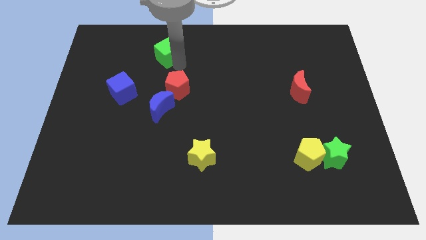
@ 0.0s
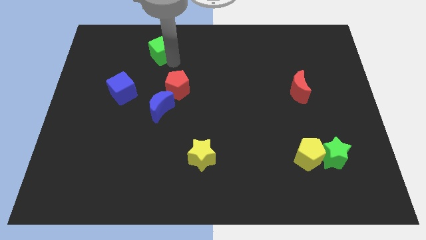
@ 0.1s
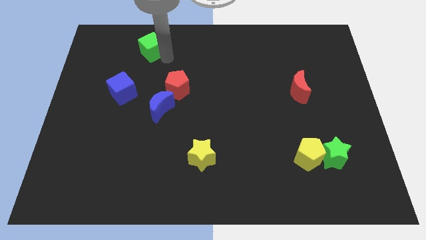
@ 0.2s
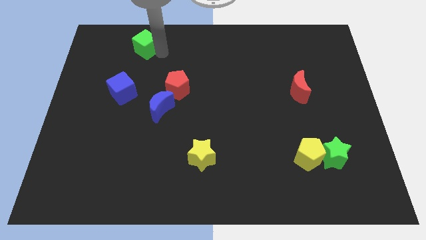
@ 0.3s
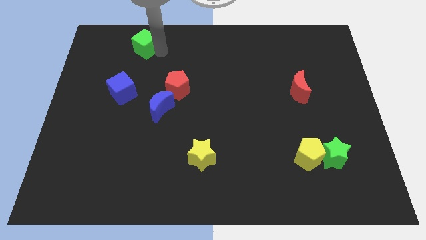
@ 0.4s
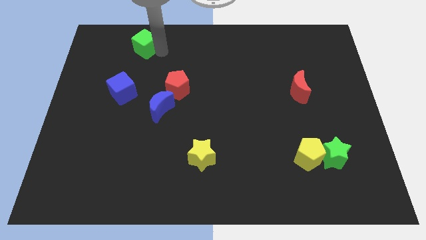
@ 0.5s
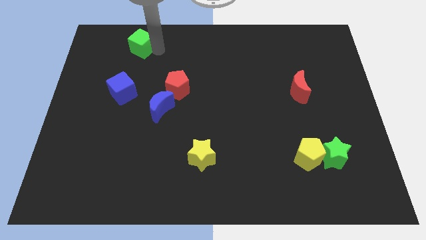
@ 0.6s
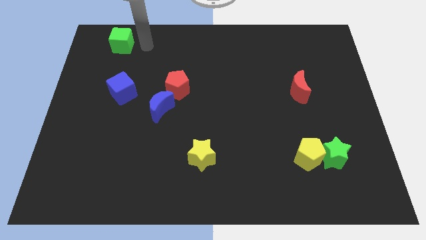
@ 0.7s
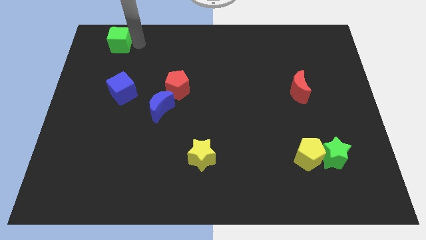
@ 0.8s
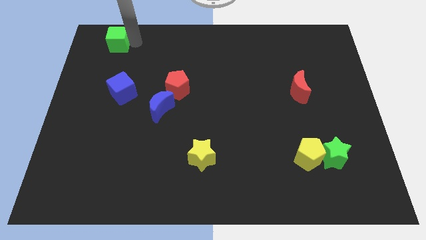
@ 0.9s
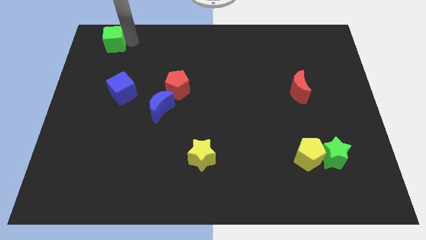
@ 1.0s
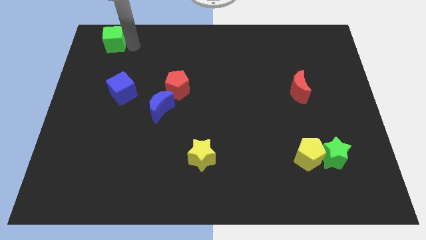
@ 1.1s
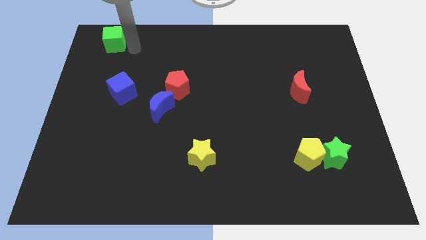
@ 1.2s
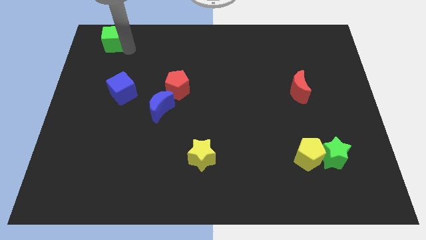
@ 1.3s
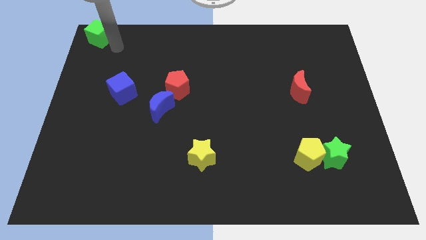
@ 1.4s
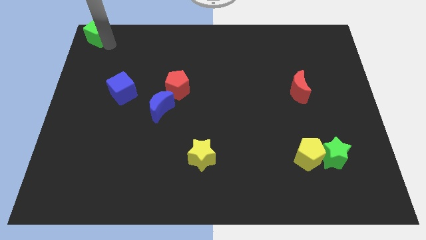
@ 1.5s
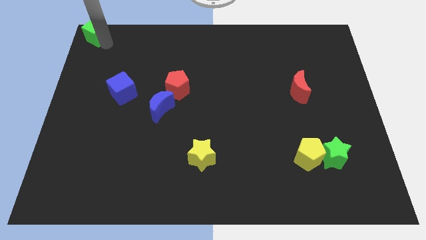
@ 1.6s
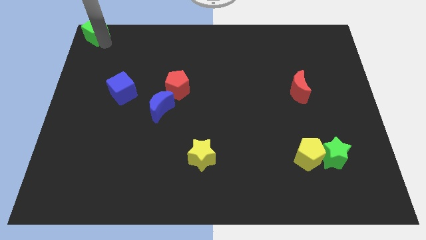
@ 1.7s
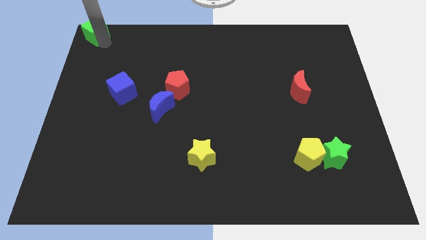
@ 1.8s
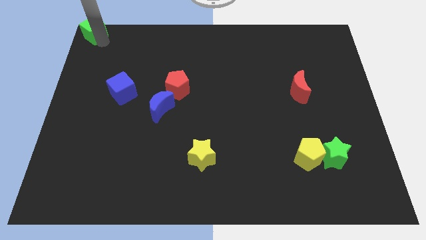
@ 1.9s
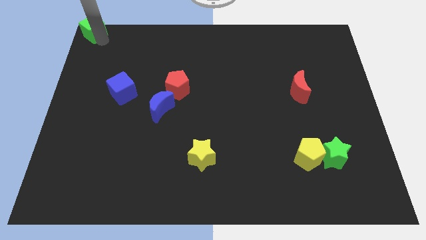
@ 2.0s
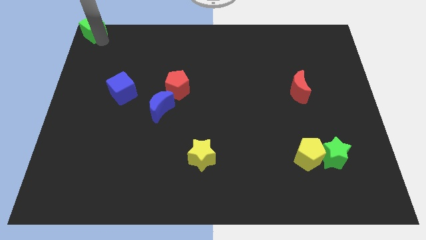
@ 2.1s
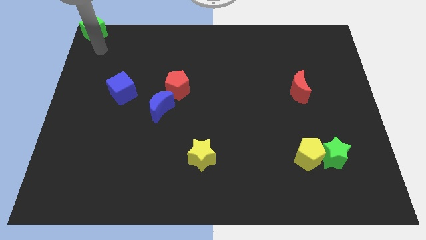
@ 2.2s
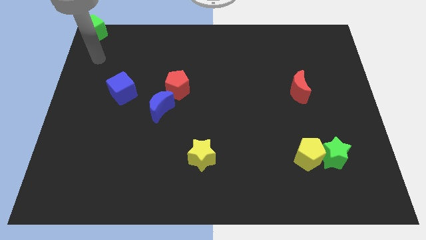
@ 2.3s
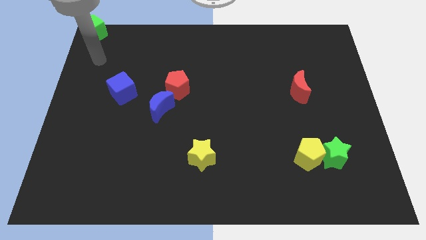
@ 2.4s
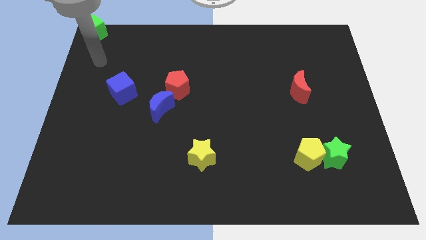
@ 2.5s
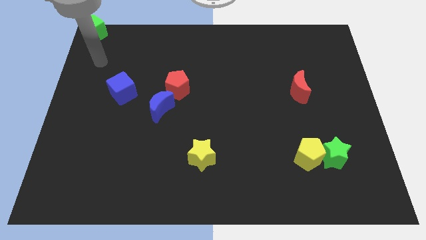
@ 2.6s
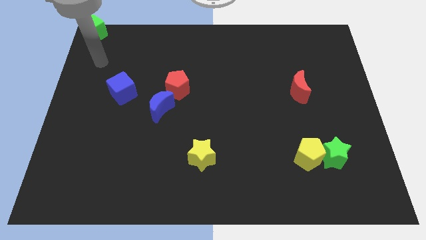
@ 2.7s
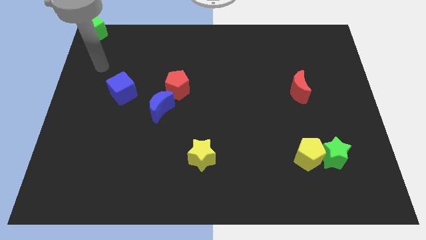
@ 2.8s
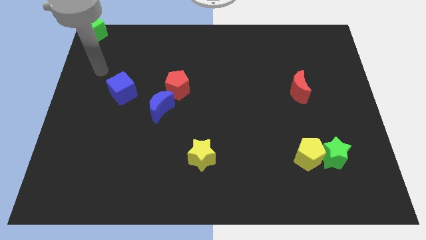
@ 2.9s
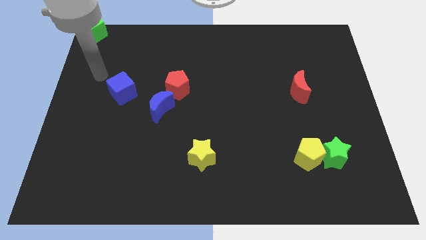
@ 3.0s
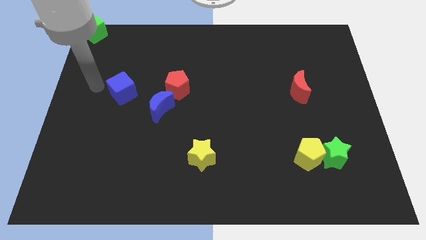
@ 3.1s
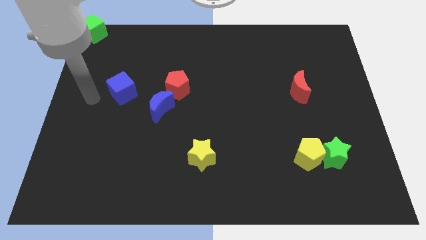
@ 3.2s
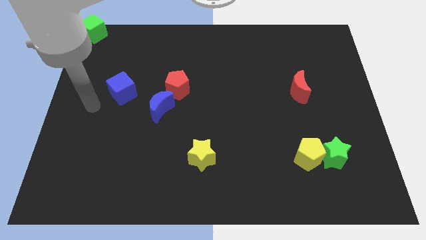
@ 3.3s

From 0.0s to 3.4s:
move the green cube to the top left corner

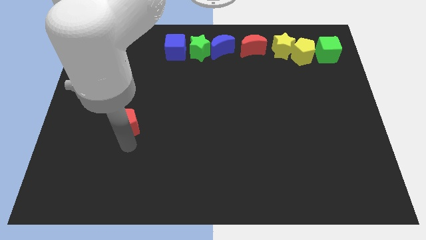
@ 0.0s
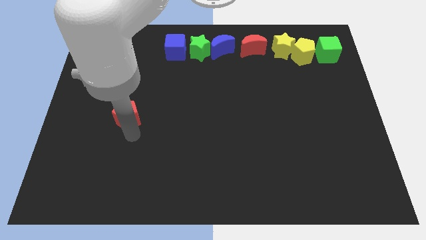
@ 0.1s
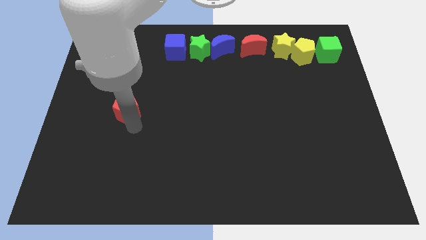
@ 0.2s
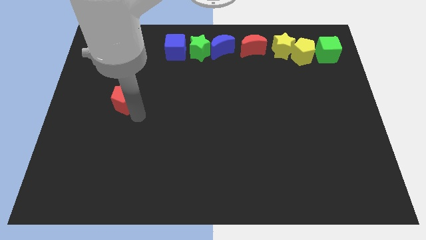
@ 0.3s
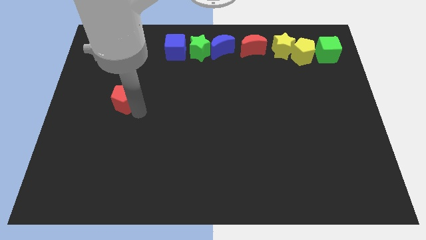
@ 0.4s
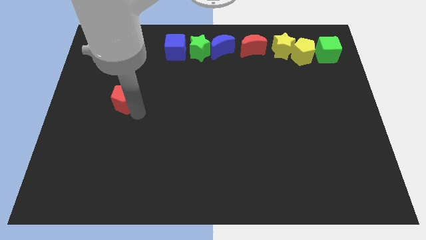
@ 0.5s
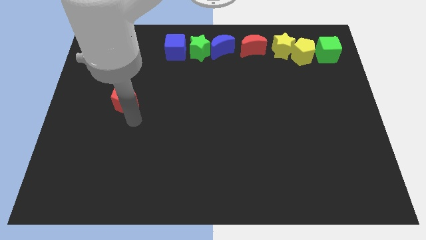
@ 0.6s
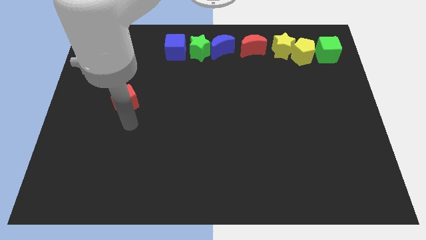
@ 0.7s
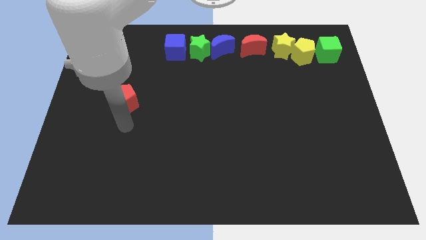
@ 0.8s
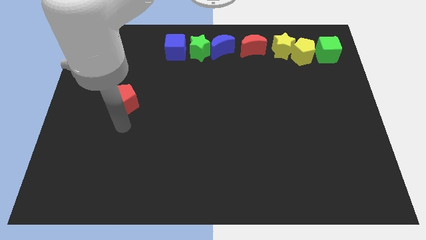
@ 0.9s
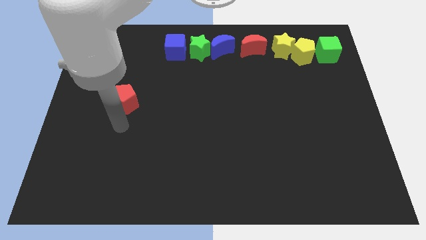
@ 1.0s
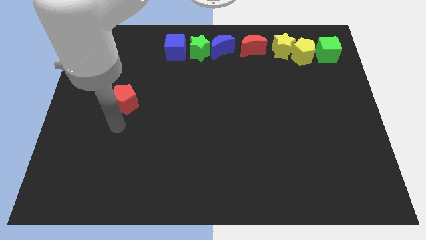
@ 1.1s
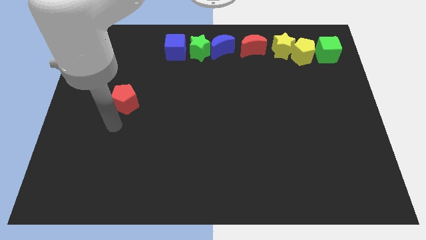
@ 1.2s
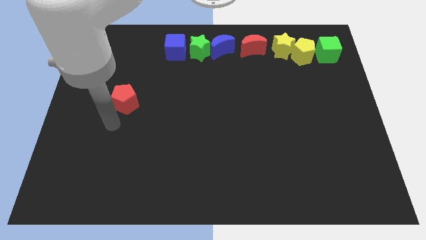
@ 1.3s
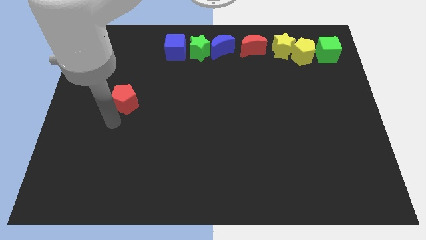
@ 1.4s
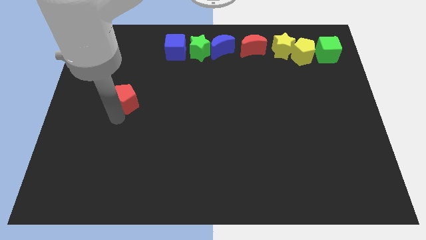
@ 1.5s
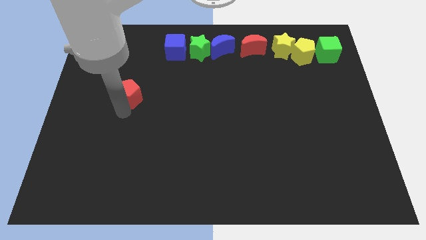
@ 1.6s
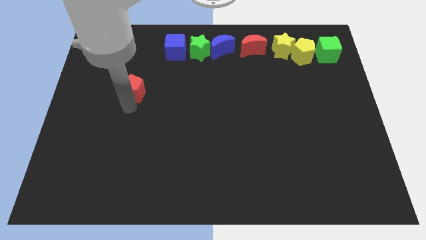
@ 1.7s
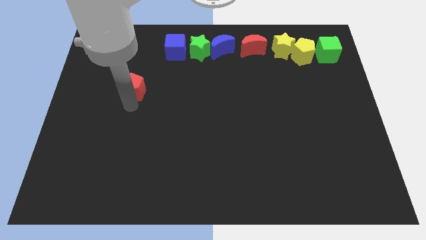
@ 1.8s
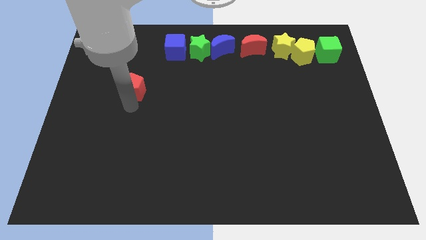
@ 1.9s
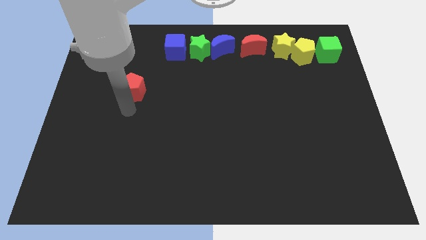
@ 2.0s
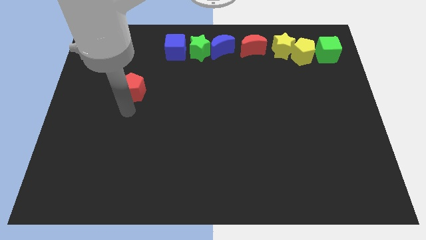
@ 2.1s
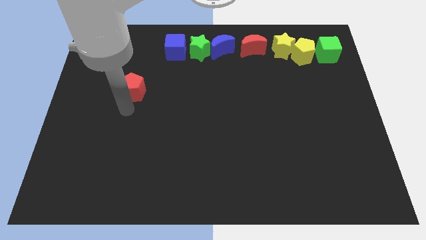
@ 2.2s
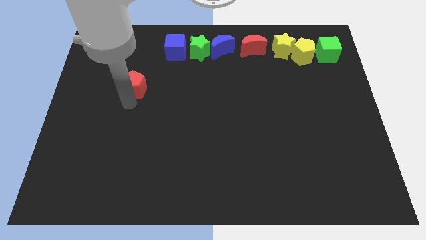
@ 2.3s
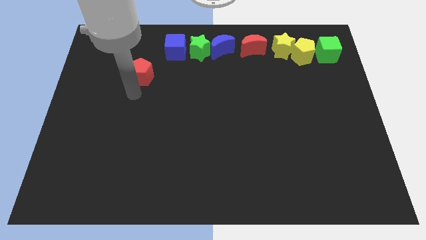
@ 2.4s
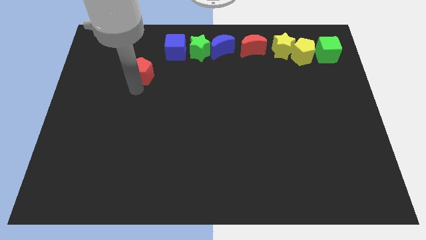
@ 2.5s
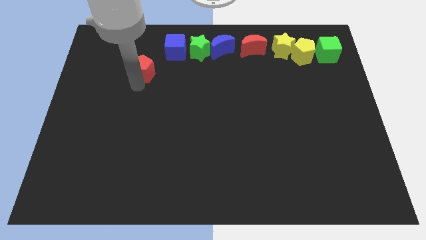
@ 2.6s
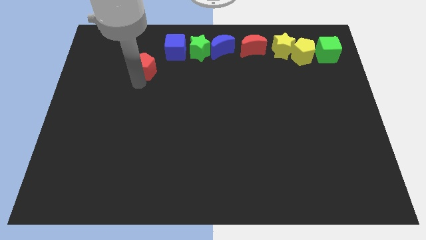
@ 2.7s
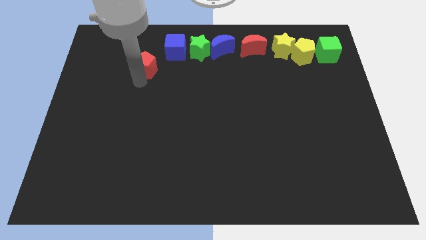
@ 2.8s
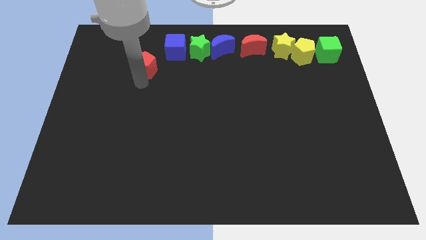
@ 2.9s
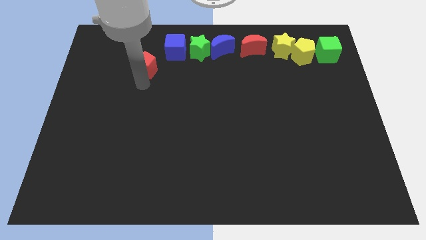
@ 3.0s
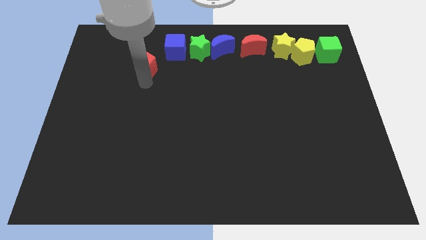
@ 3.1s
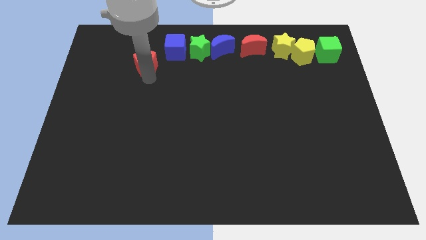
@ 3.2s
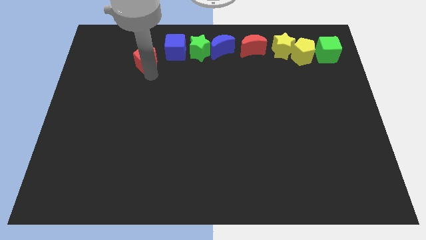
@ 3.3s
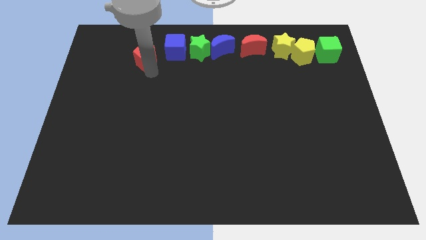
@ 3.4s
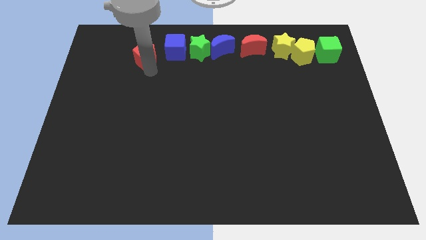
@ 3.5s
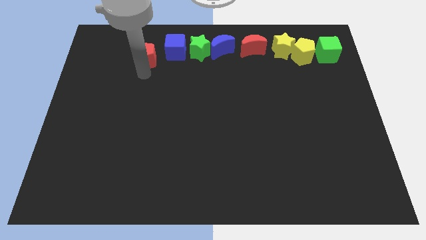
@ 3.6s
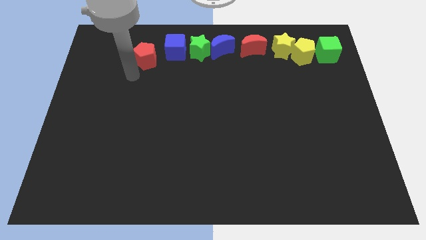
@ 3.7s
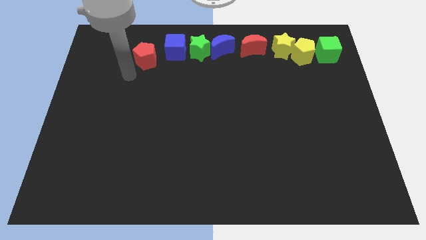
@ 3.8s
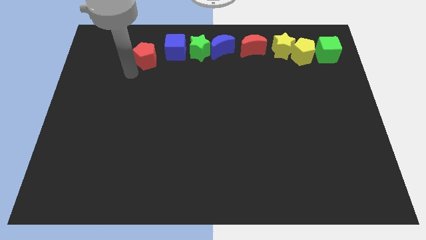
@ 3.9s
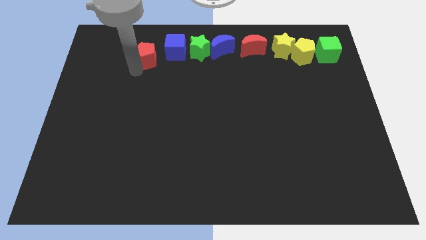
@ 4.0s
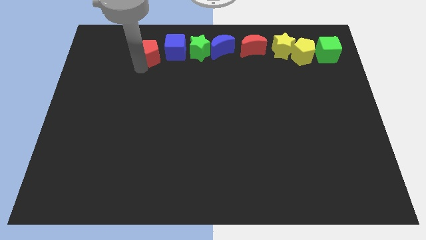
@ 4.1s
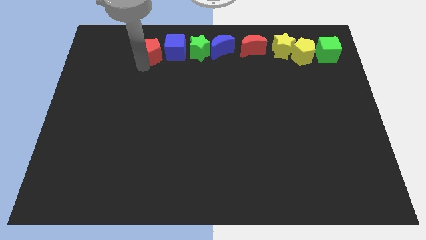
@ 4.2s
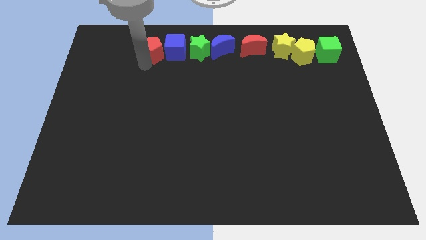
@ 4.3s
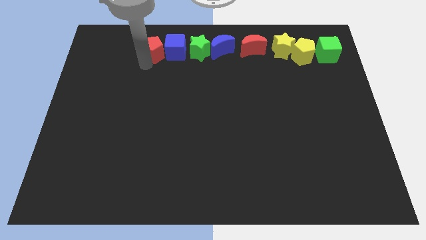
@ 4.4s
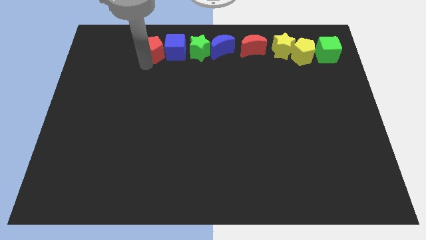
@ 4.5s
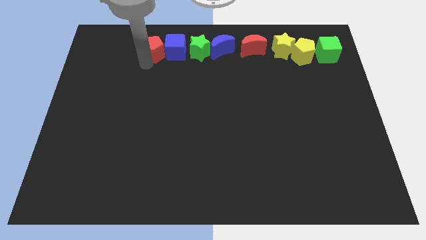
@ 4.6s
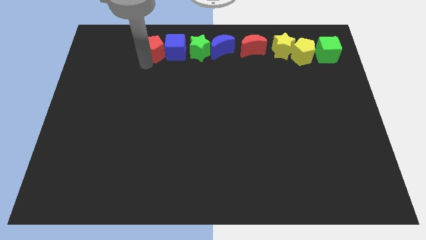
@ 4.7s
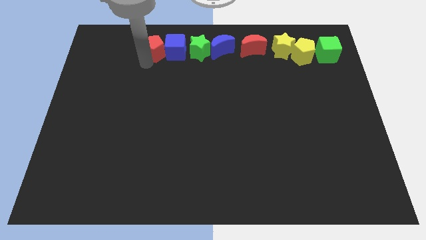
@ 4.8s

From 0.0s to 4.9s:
push red pentagon to top left corner of the board

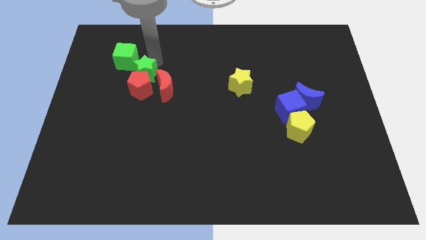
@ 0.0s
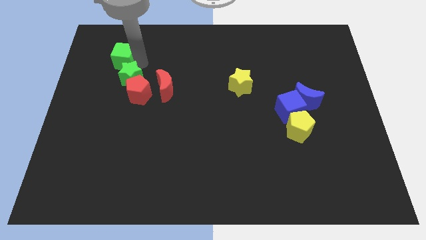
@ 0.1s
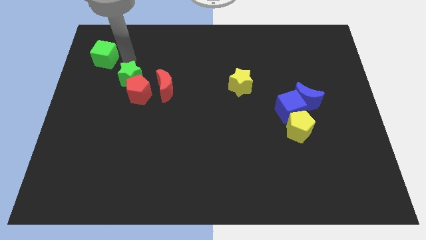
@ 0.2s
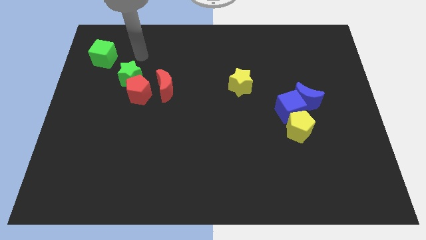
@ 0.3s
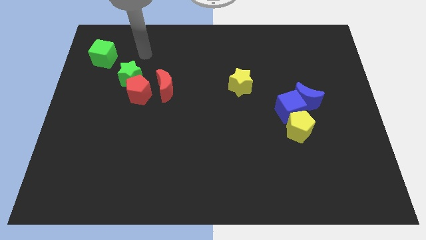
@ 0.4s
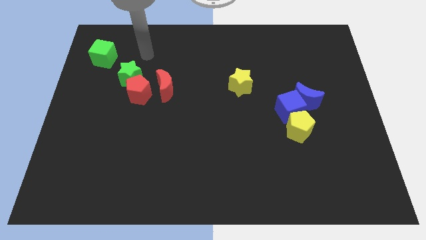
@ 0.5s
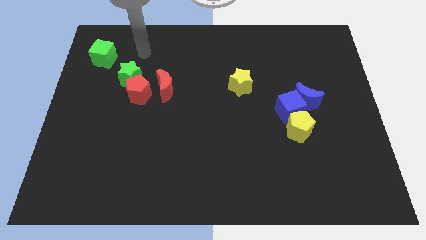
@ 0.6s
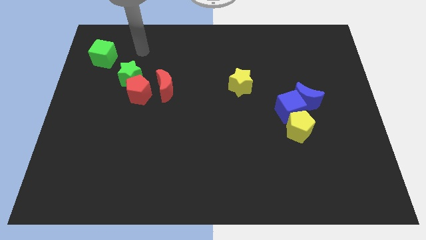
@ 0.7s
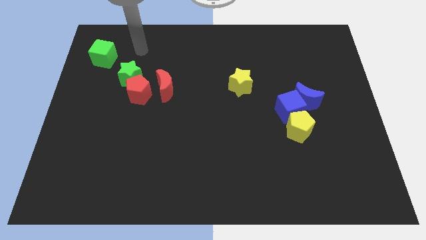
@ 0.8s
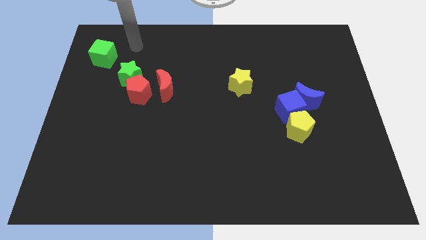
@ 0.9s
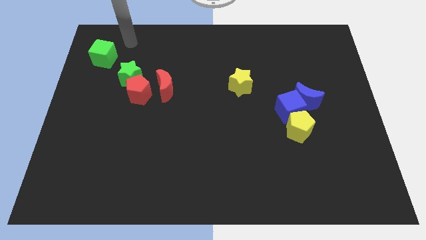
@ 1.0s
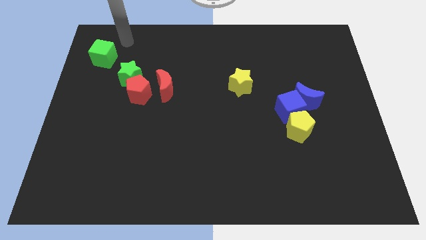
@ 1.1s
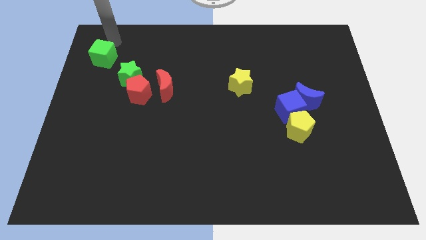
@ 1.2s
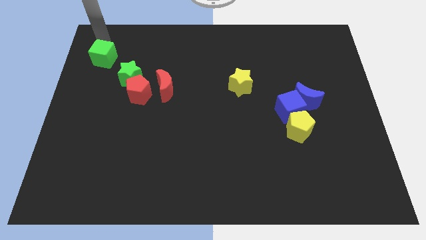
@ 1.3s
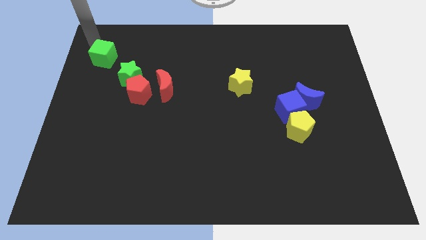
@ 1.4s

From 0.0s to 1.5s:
separate the green cube and green star
